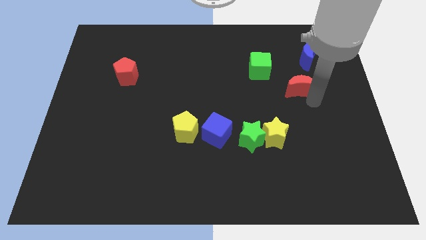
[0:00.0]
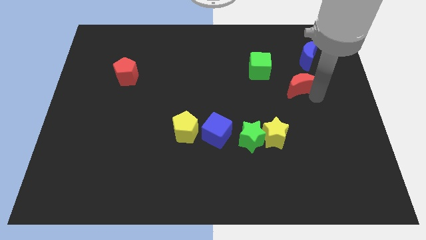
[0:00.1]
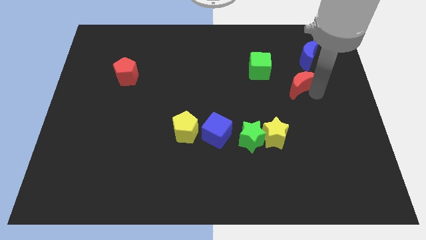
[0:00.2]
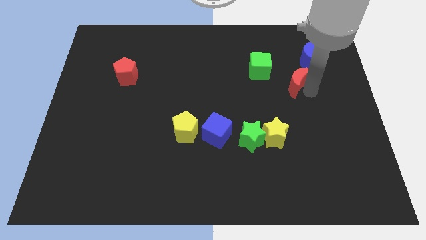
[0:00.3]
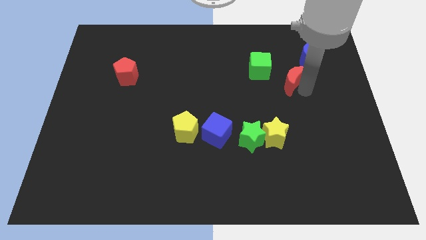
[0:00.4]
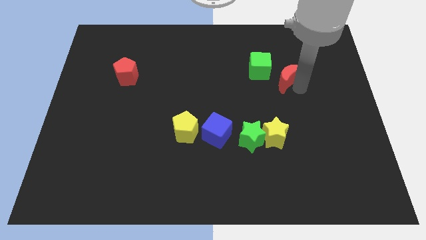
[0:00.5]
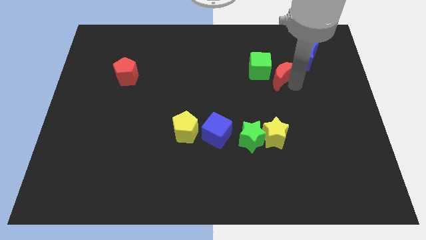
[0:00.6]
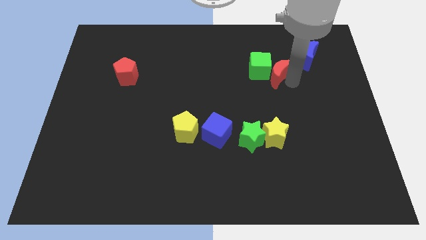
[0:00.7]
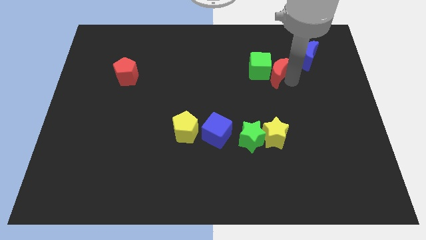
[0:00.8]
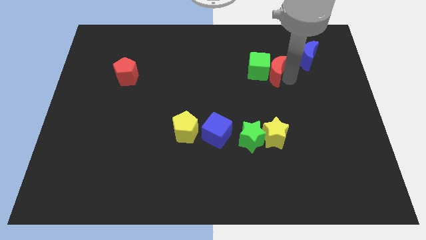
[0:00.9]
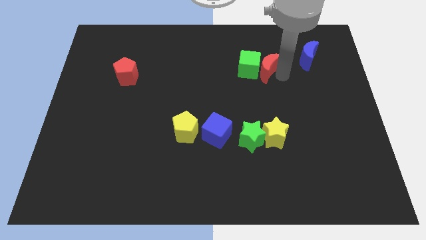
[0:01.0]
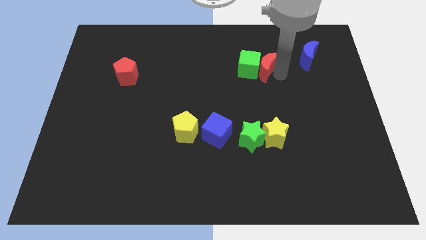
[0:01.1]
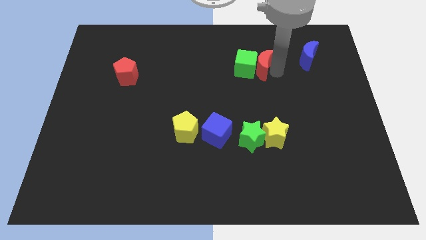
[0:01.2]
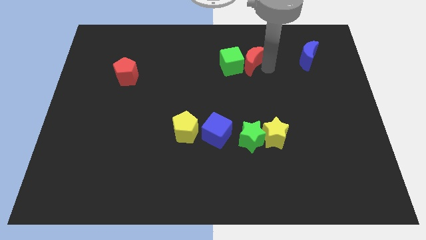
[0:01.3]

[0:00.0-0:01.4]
push the red moon into the green cube

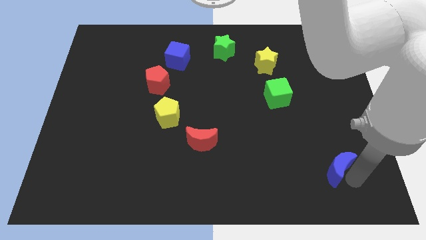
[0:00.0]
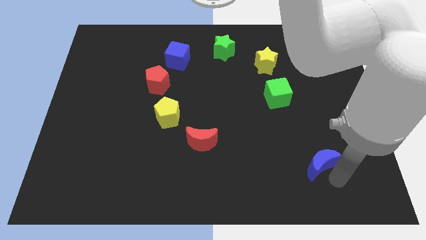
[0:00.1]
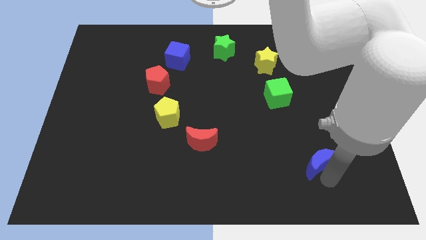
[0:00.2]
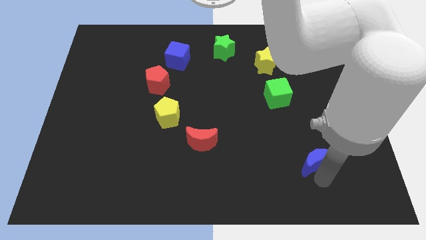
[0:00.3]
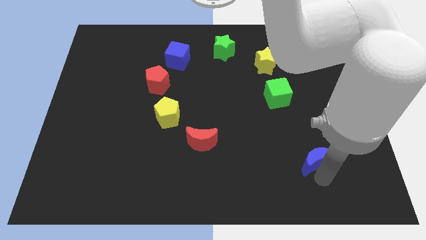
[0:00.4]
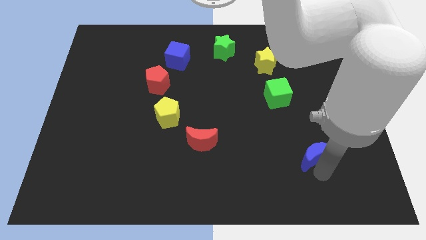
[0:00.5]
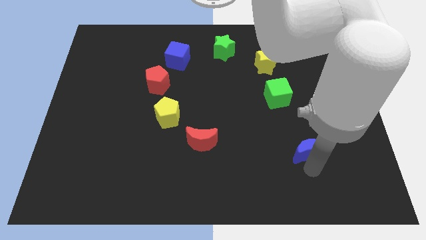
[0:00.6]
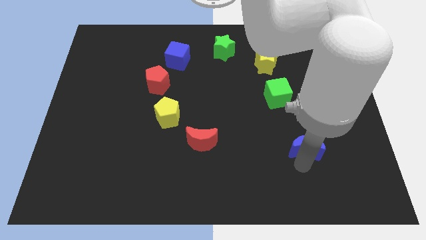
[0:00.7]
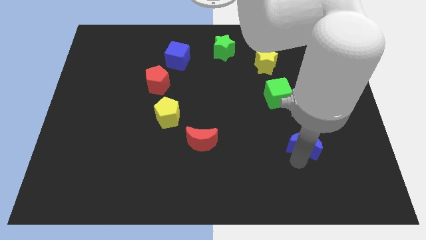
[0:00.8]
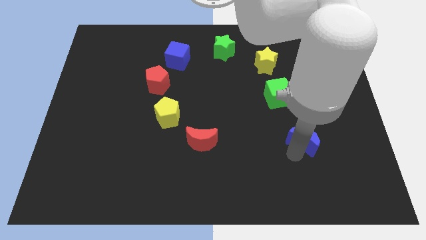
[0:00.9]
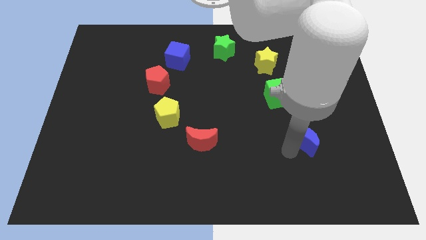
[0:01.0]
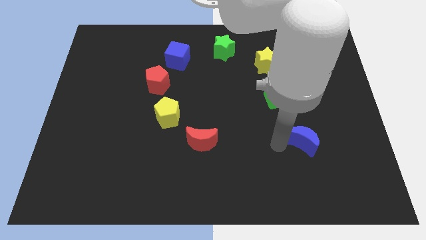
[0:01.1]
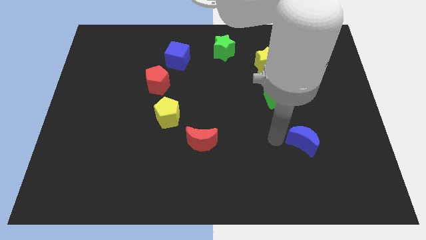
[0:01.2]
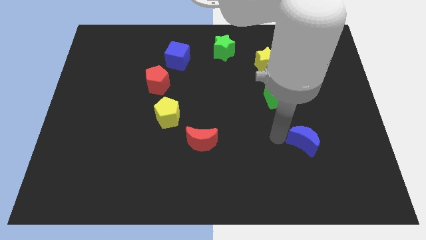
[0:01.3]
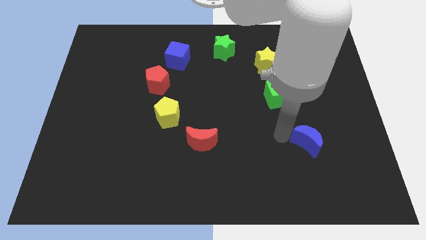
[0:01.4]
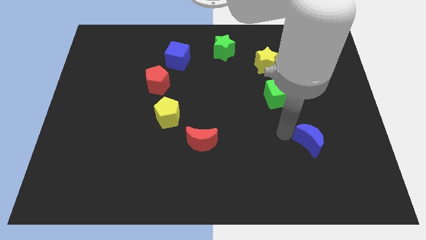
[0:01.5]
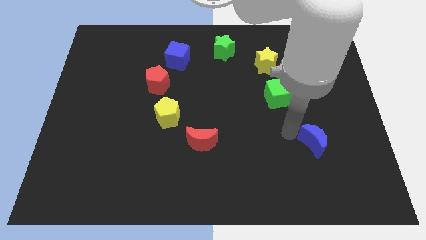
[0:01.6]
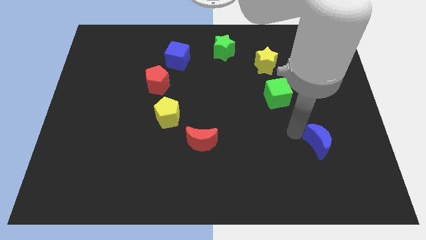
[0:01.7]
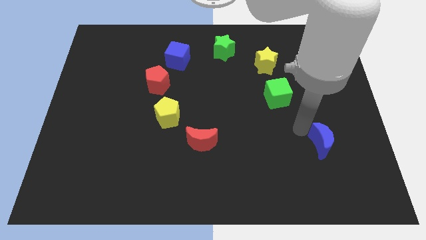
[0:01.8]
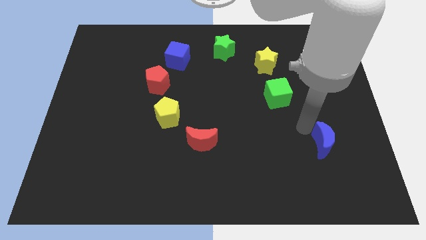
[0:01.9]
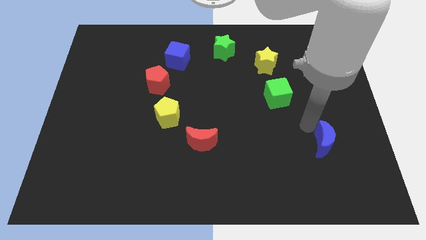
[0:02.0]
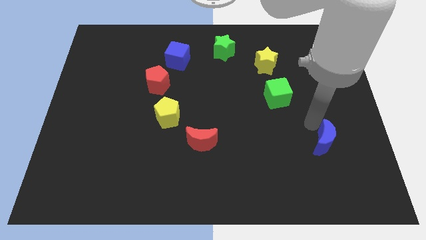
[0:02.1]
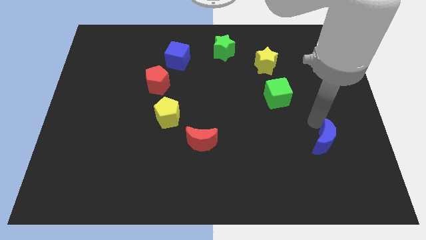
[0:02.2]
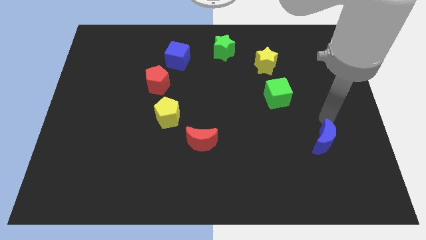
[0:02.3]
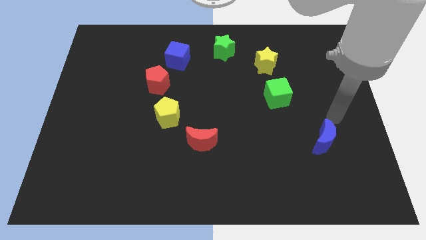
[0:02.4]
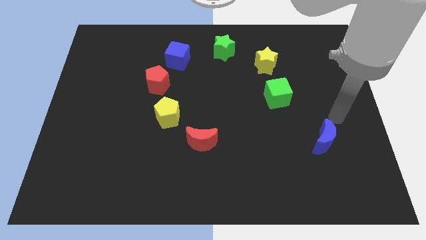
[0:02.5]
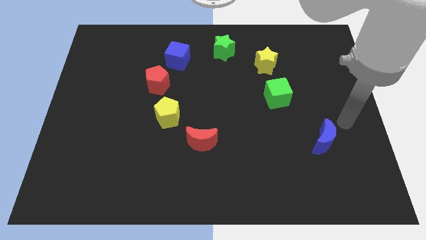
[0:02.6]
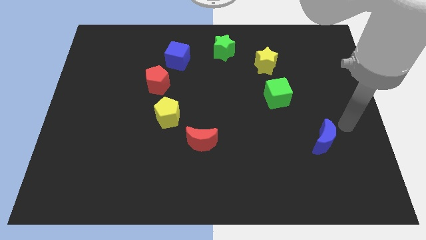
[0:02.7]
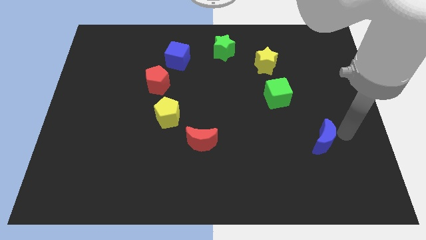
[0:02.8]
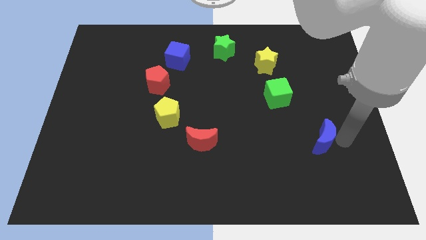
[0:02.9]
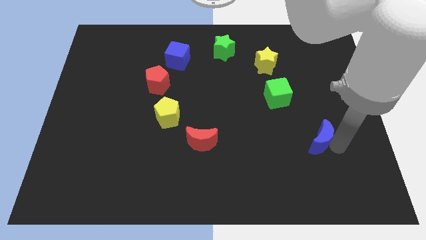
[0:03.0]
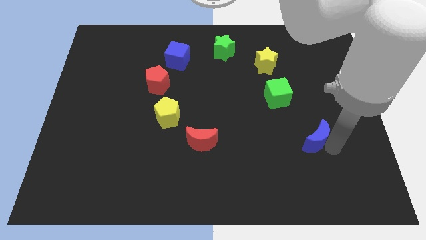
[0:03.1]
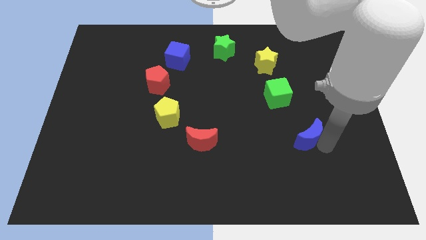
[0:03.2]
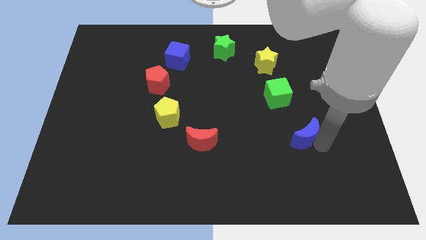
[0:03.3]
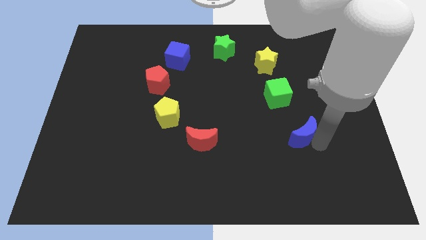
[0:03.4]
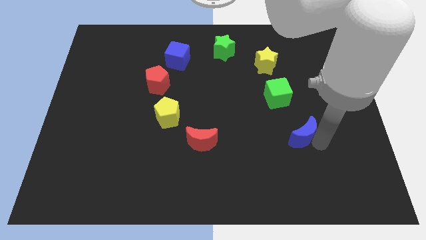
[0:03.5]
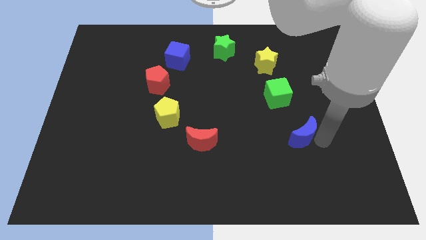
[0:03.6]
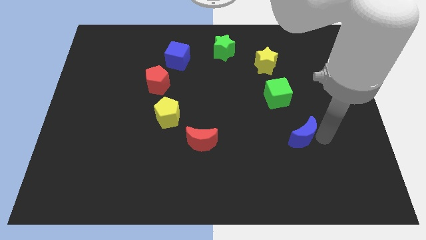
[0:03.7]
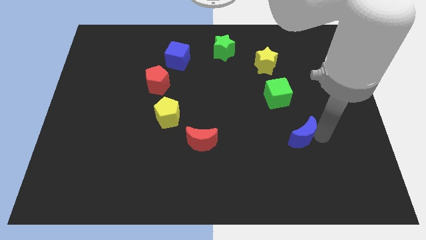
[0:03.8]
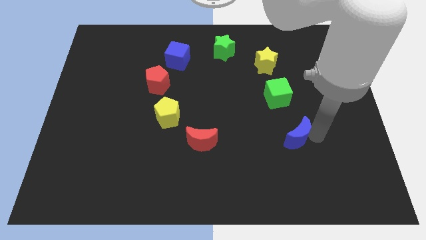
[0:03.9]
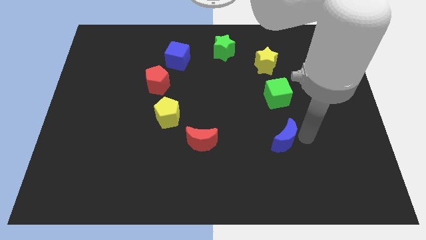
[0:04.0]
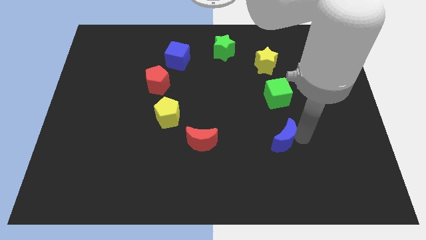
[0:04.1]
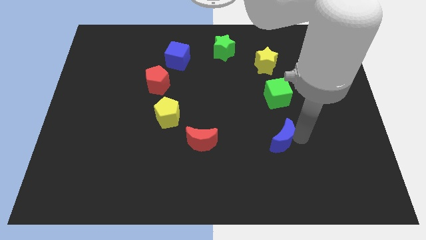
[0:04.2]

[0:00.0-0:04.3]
place the blue moon to the right of the red moon

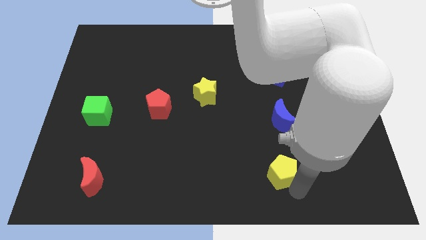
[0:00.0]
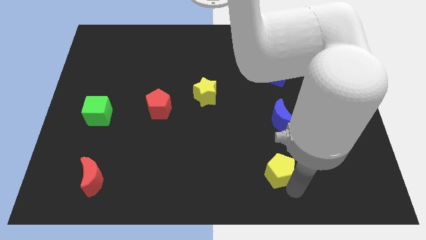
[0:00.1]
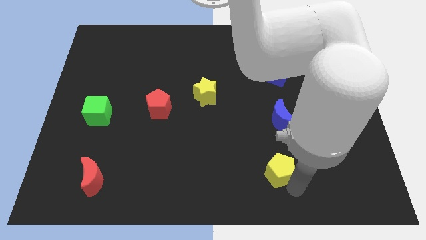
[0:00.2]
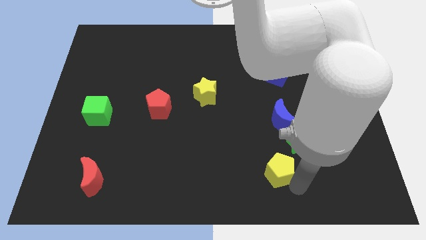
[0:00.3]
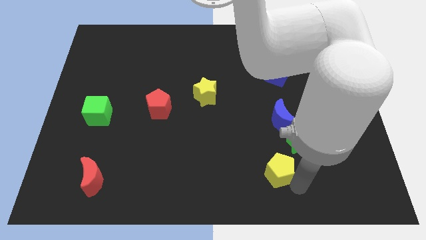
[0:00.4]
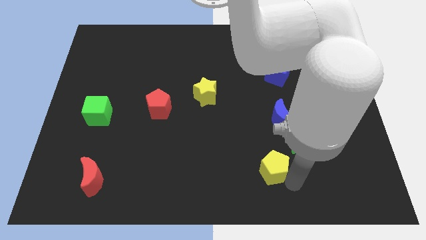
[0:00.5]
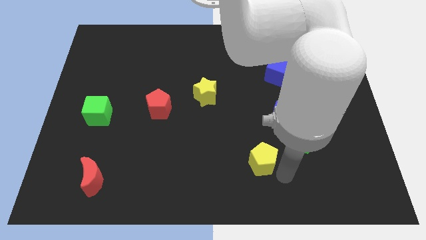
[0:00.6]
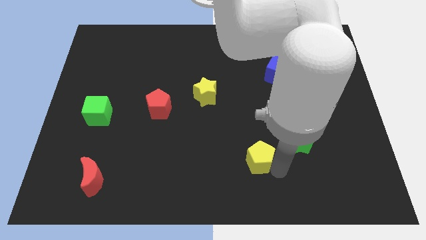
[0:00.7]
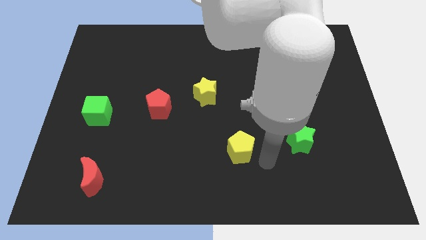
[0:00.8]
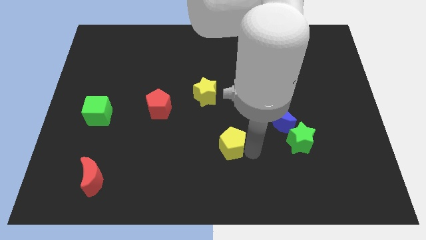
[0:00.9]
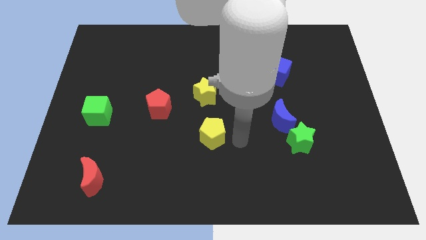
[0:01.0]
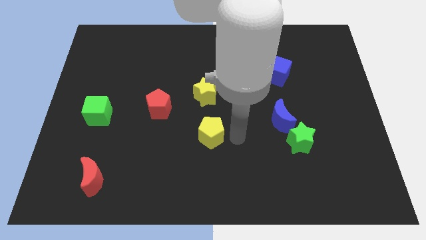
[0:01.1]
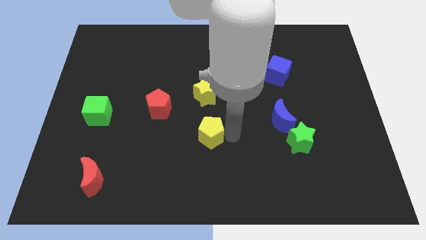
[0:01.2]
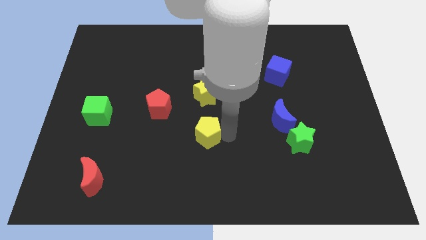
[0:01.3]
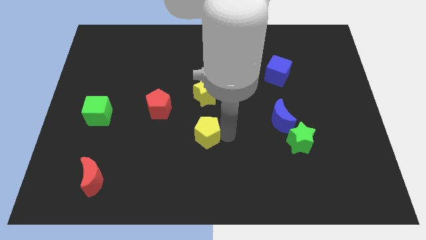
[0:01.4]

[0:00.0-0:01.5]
place the yellow pentagon below the yellow star

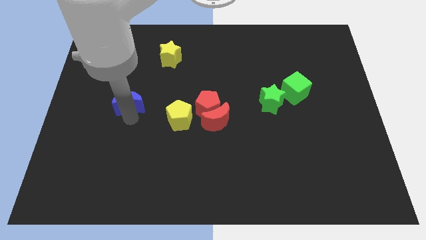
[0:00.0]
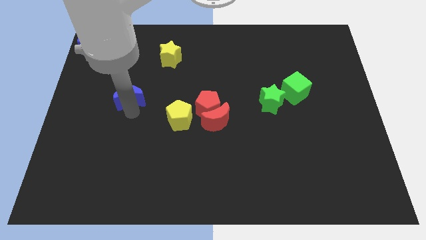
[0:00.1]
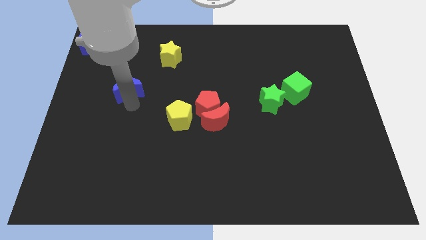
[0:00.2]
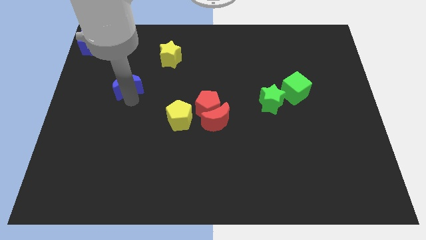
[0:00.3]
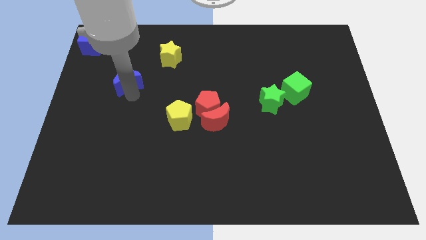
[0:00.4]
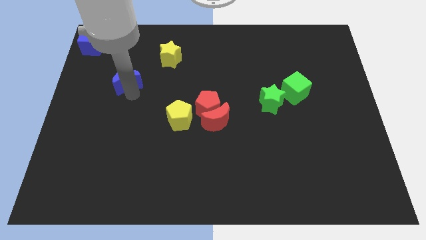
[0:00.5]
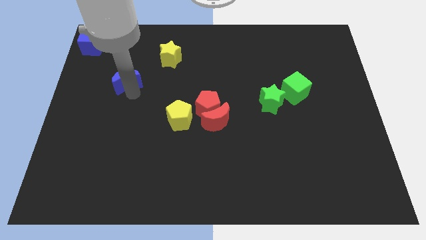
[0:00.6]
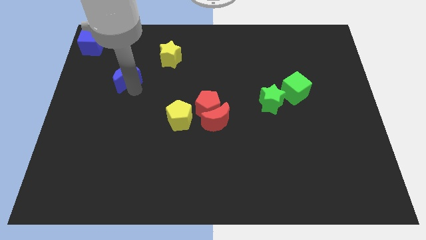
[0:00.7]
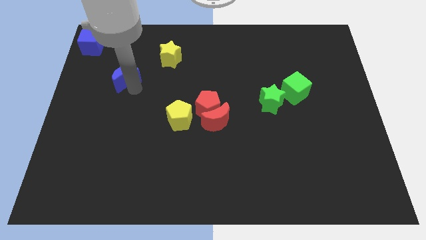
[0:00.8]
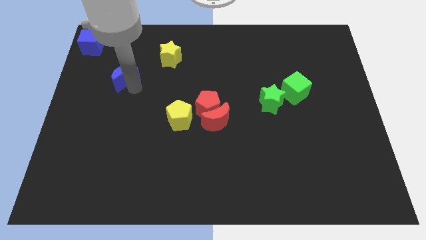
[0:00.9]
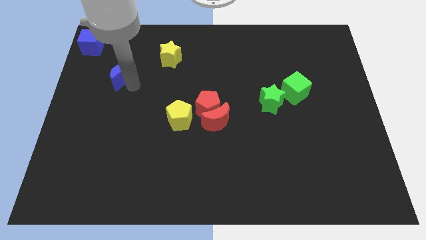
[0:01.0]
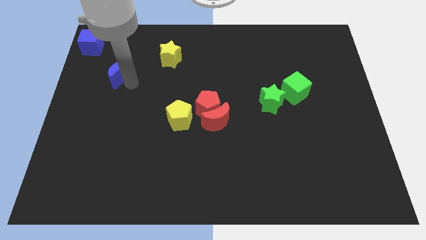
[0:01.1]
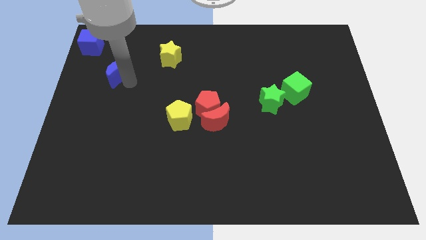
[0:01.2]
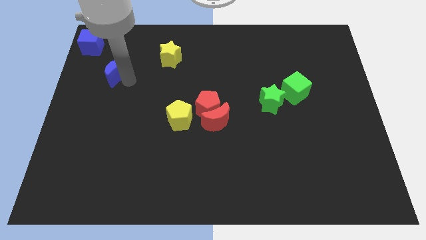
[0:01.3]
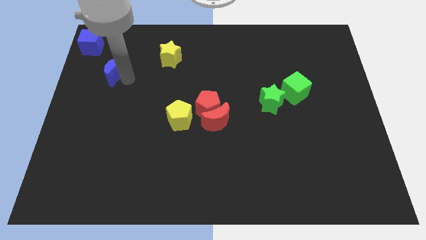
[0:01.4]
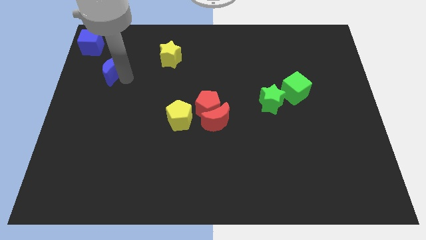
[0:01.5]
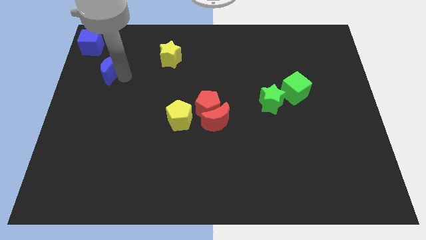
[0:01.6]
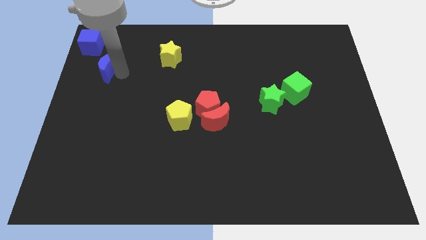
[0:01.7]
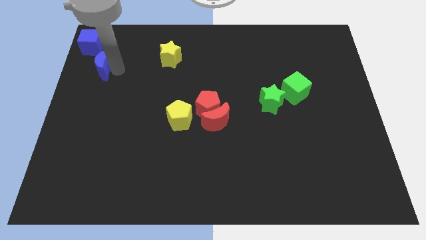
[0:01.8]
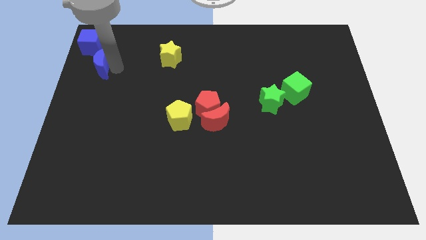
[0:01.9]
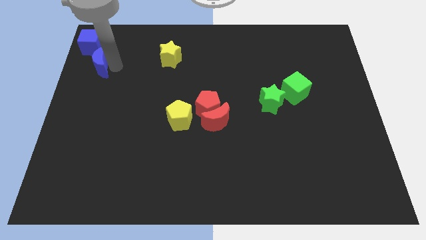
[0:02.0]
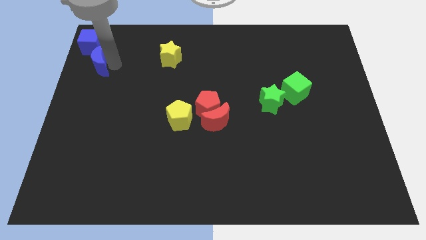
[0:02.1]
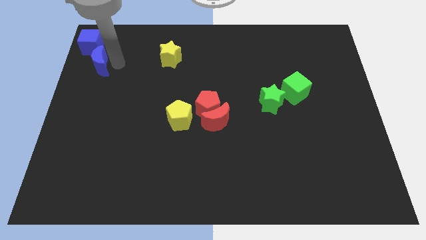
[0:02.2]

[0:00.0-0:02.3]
place the blue crescent into the blue cube
